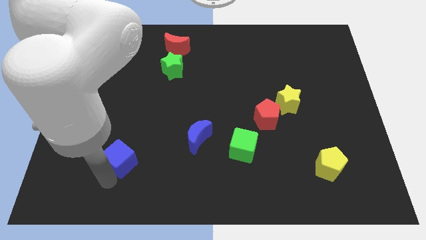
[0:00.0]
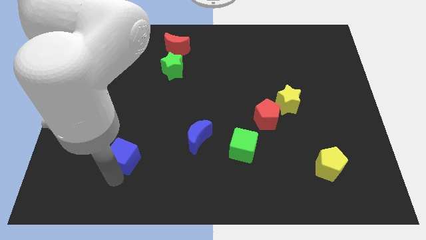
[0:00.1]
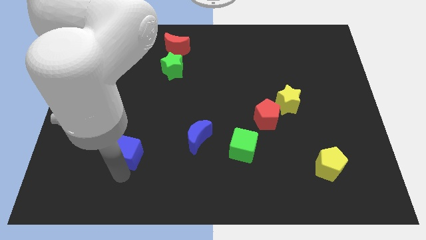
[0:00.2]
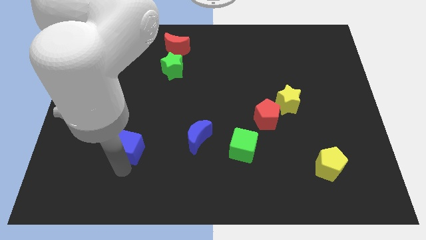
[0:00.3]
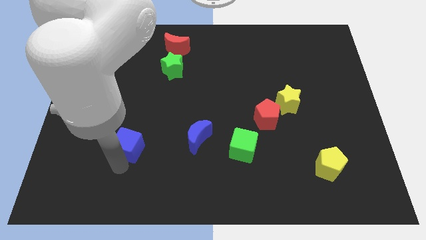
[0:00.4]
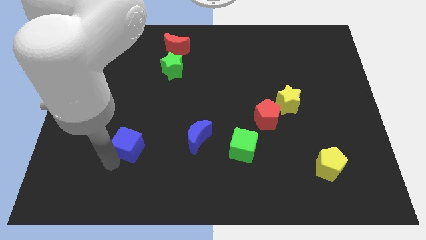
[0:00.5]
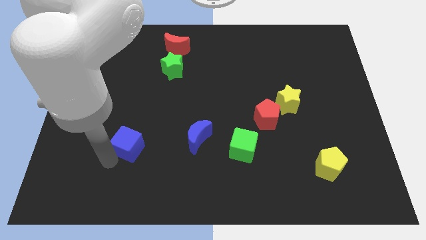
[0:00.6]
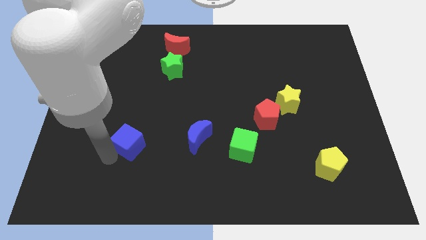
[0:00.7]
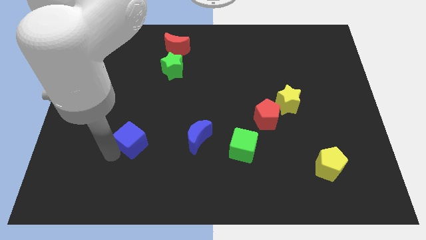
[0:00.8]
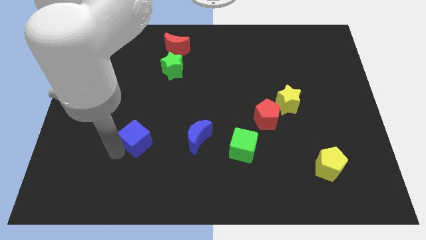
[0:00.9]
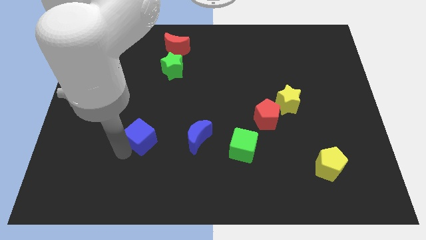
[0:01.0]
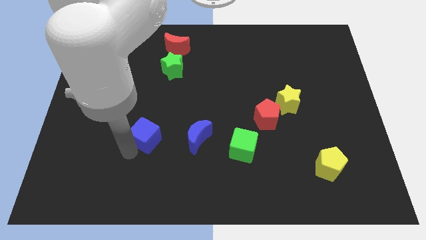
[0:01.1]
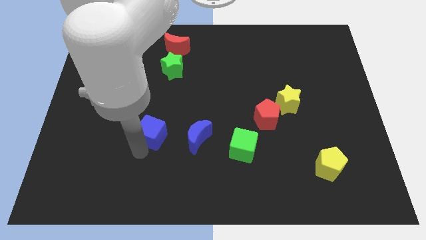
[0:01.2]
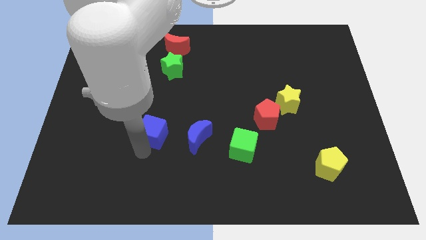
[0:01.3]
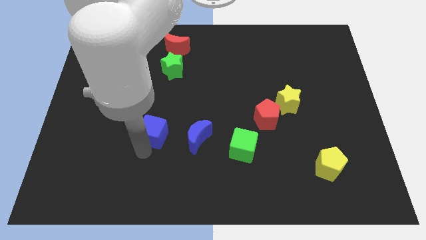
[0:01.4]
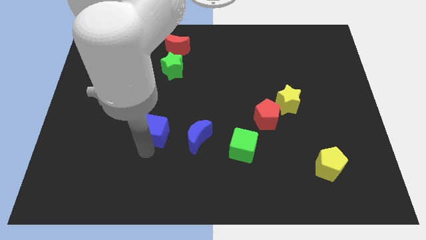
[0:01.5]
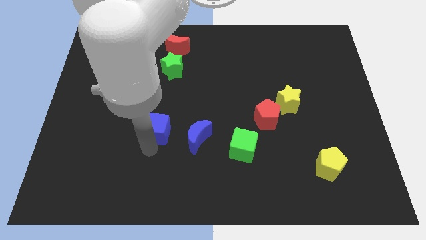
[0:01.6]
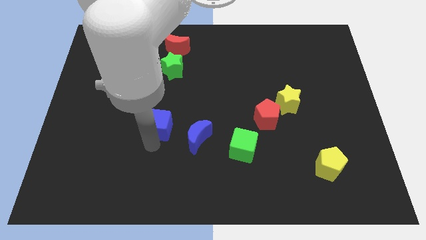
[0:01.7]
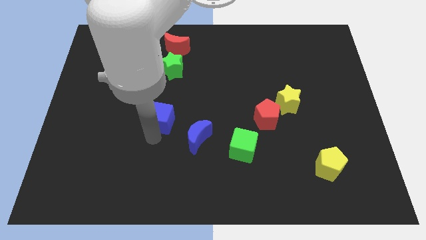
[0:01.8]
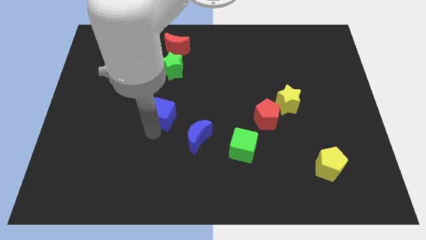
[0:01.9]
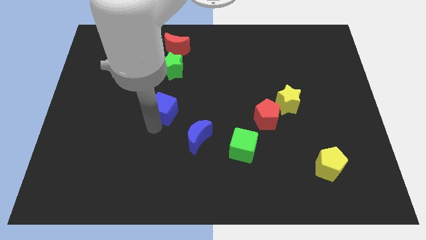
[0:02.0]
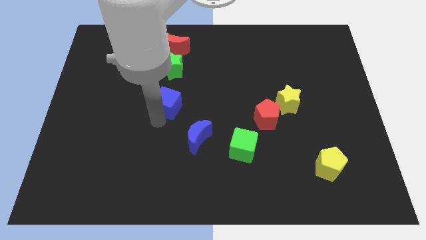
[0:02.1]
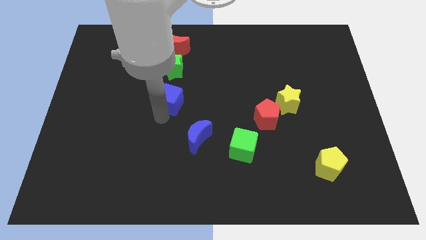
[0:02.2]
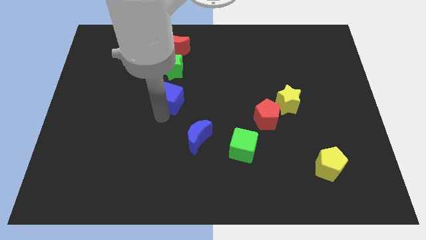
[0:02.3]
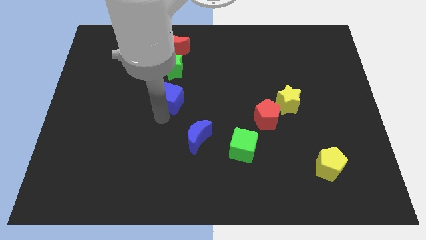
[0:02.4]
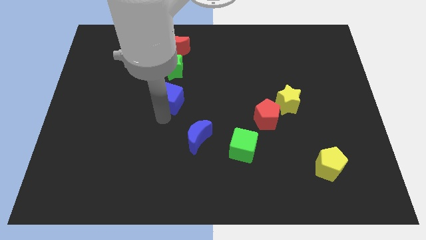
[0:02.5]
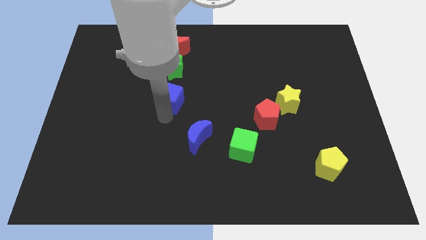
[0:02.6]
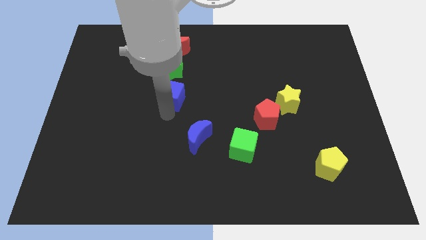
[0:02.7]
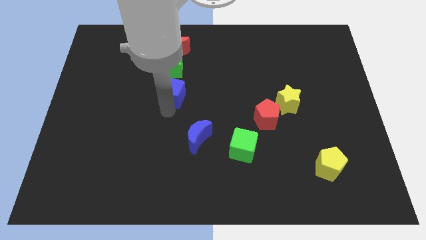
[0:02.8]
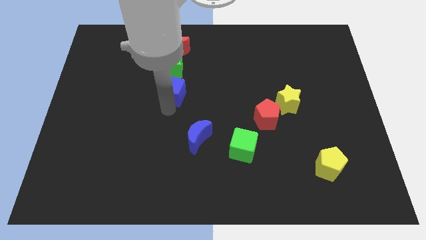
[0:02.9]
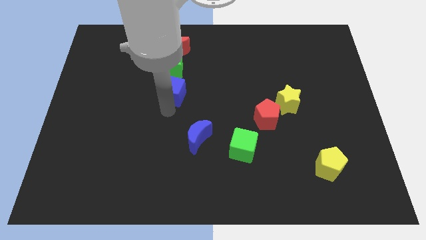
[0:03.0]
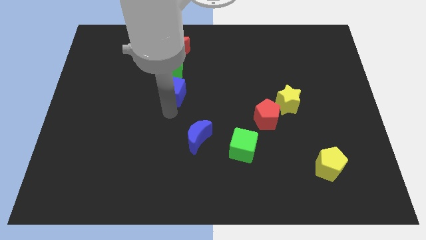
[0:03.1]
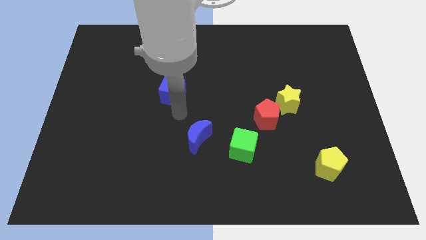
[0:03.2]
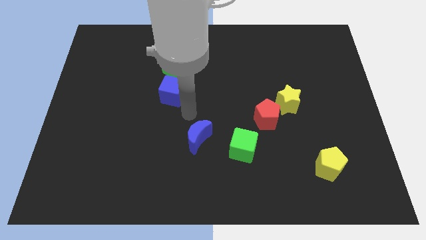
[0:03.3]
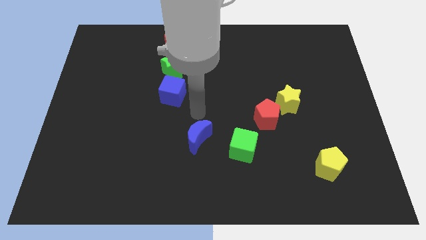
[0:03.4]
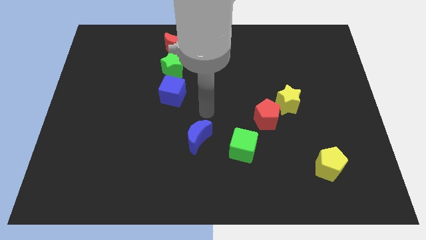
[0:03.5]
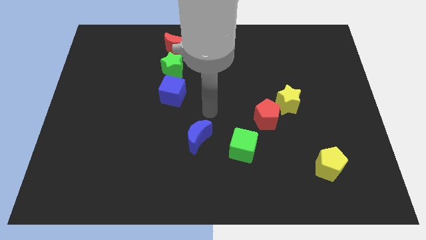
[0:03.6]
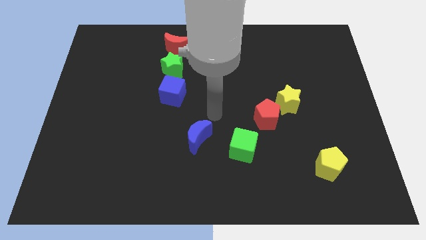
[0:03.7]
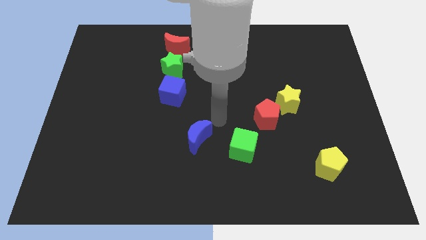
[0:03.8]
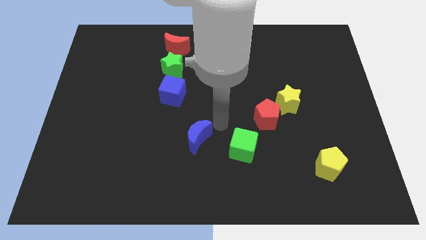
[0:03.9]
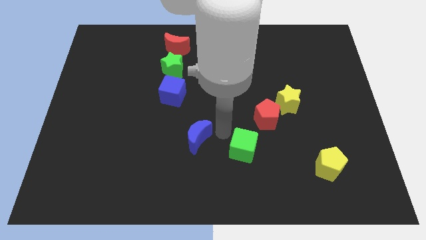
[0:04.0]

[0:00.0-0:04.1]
place the blue cube below the green star

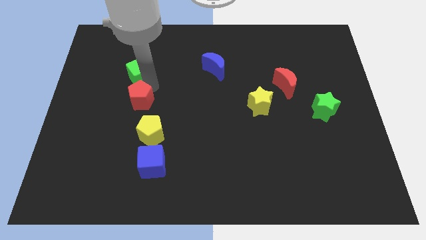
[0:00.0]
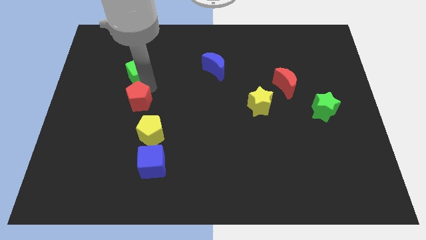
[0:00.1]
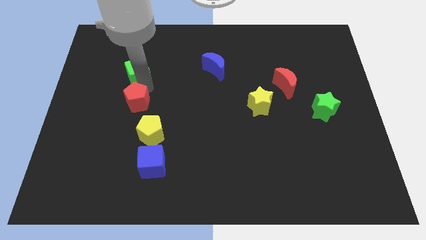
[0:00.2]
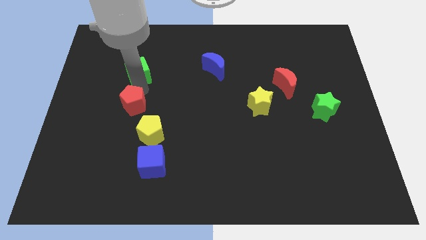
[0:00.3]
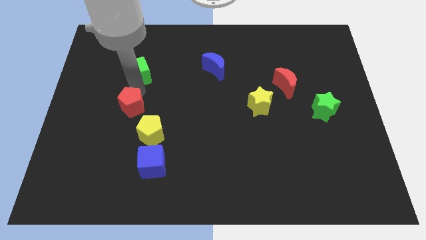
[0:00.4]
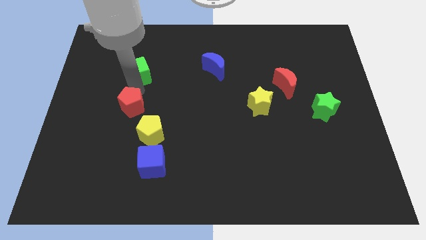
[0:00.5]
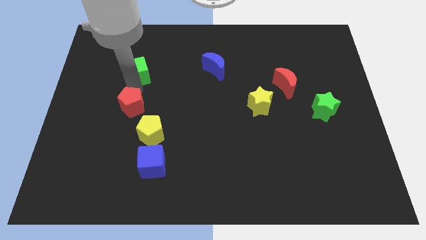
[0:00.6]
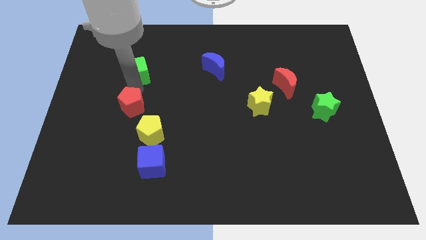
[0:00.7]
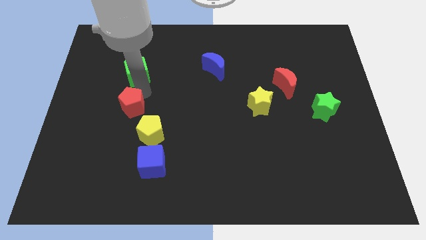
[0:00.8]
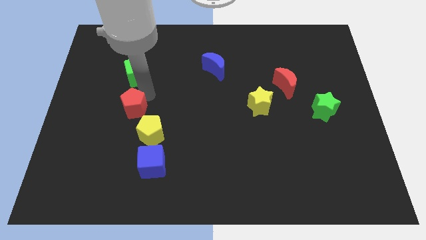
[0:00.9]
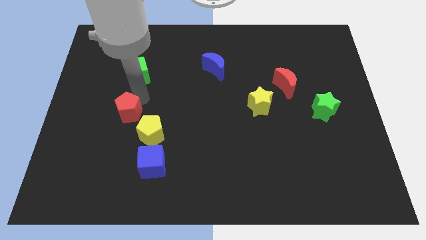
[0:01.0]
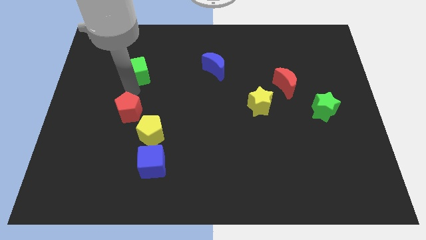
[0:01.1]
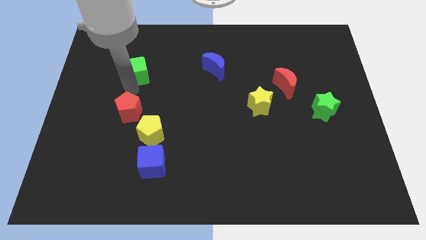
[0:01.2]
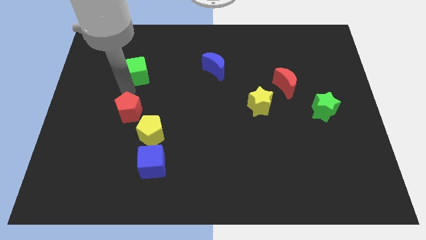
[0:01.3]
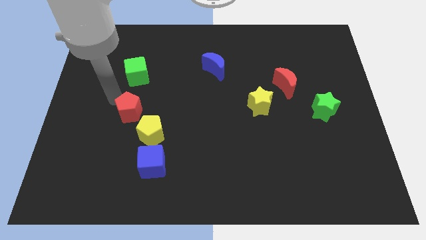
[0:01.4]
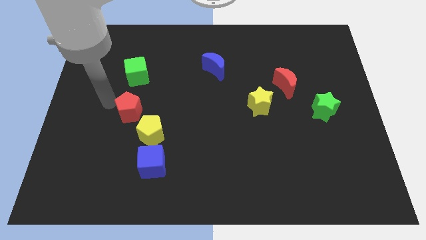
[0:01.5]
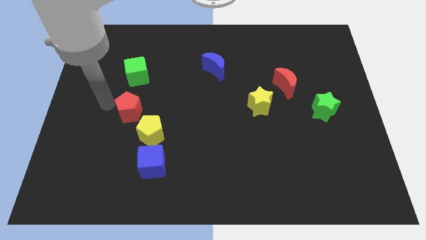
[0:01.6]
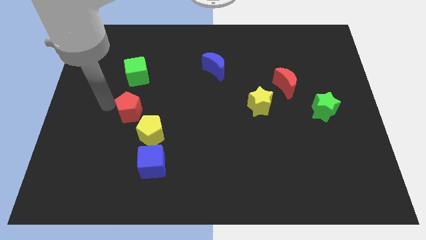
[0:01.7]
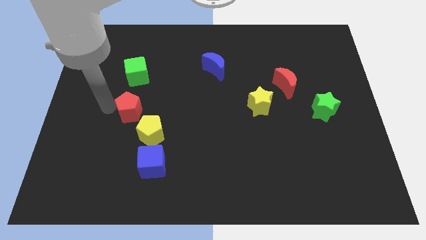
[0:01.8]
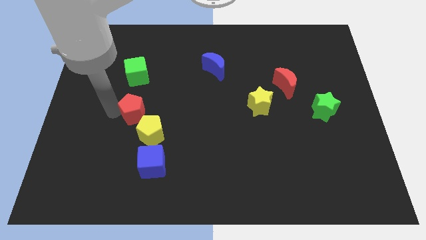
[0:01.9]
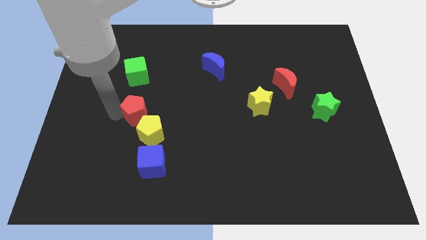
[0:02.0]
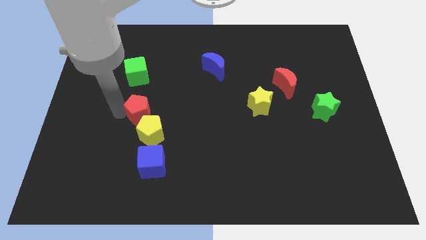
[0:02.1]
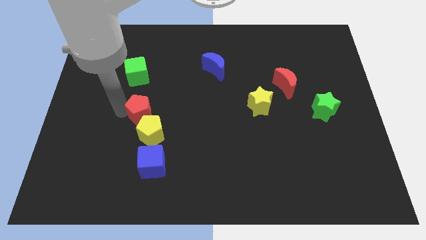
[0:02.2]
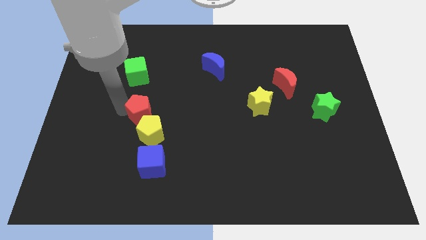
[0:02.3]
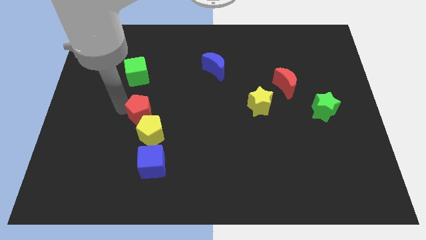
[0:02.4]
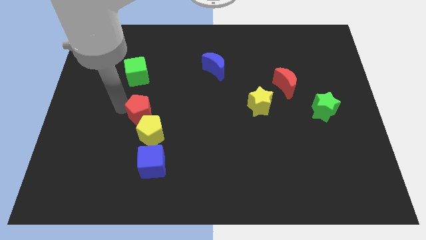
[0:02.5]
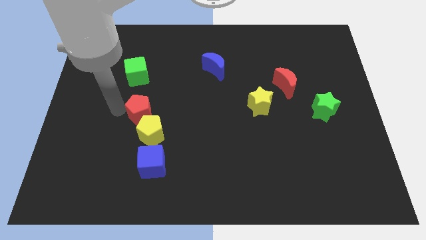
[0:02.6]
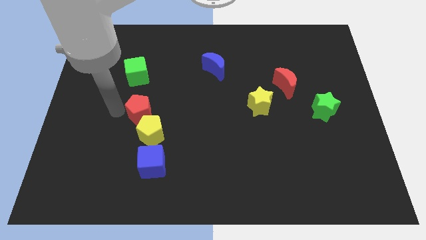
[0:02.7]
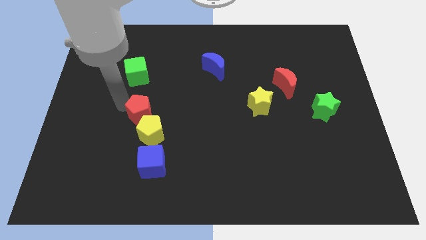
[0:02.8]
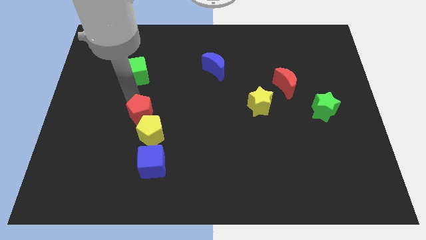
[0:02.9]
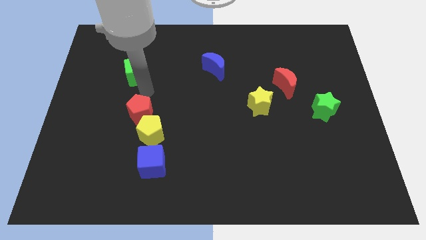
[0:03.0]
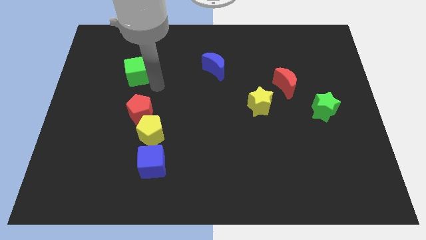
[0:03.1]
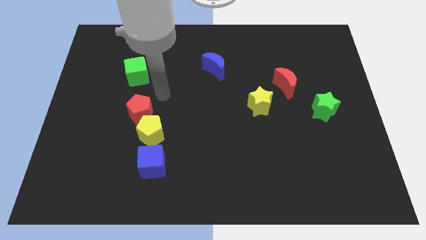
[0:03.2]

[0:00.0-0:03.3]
move the red pentagon into the yellow pentagon

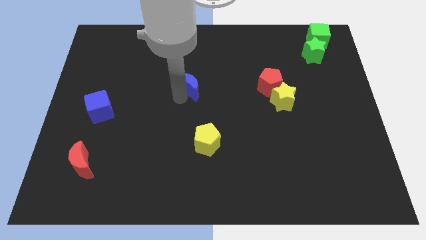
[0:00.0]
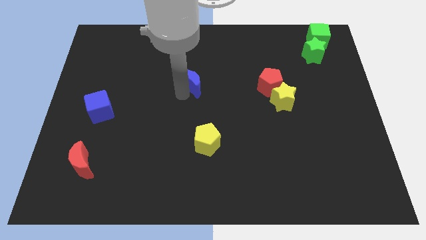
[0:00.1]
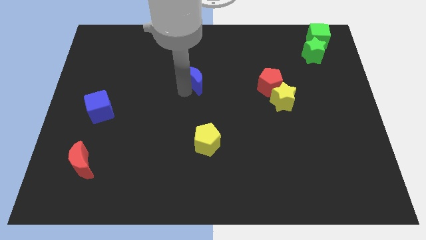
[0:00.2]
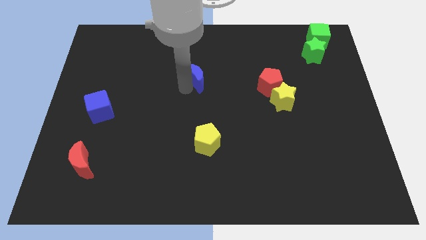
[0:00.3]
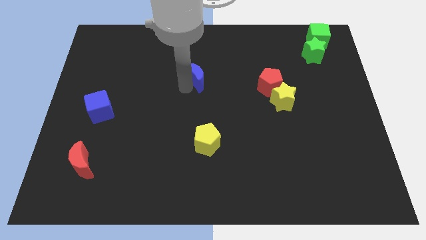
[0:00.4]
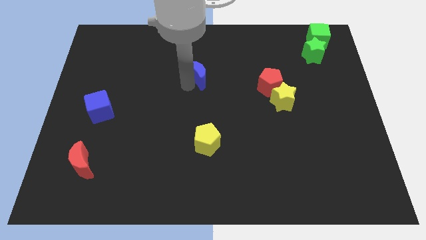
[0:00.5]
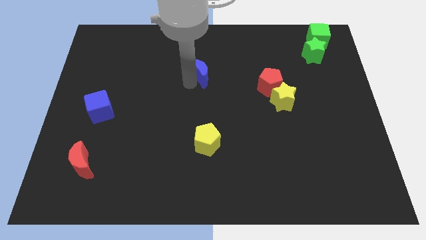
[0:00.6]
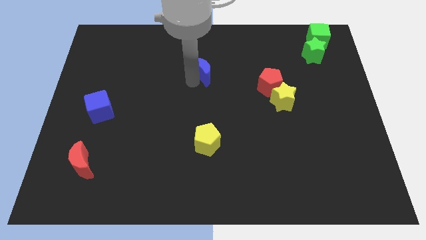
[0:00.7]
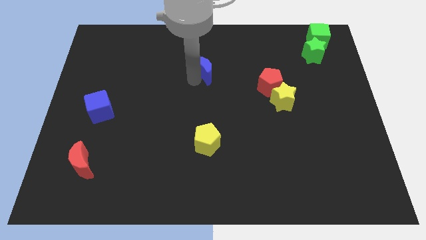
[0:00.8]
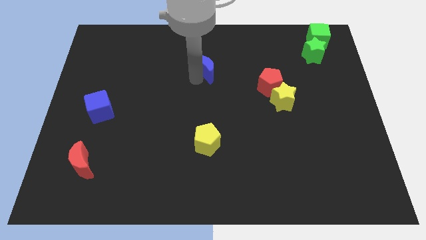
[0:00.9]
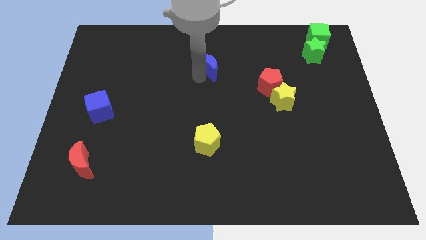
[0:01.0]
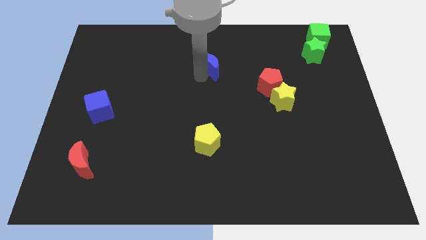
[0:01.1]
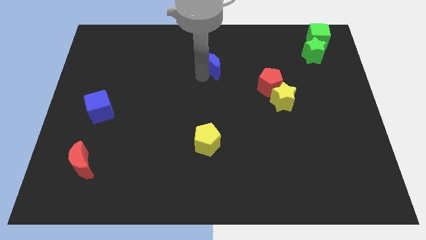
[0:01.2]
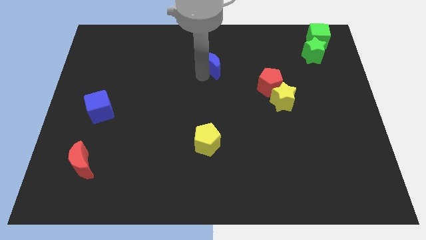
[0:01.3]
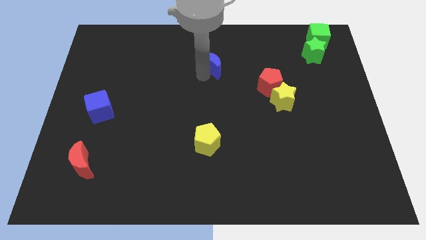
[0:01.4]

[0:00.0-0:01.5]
push the blue moon towards the top of the board
